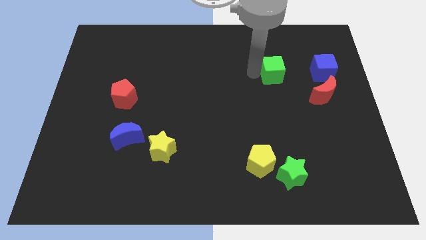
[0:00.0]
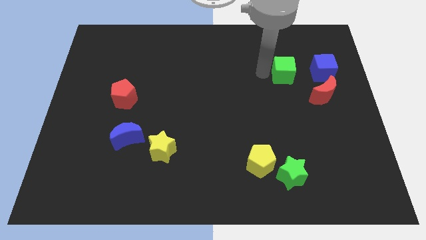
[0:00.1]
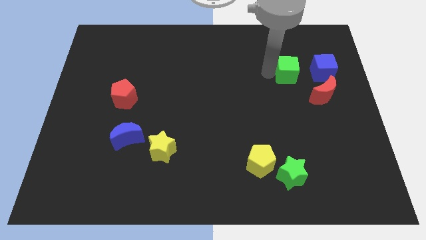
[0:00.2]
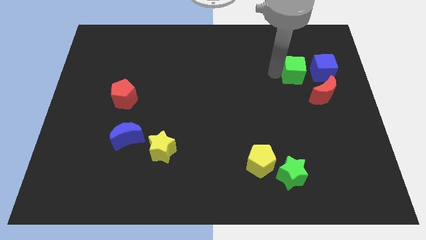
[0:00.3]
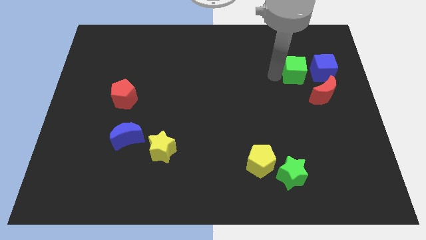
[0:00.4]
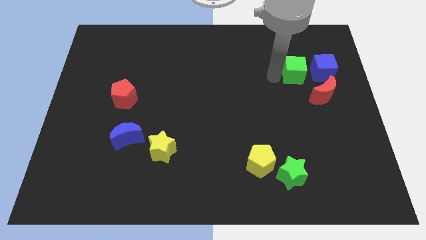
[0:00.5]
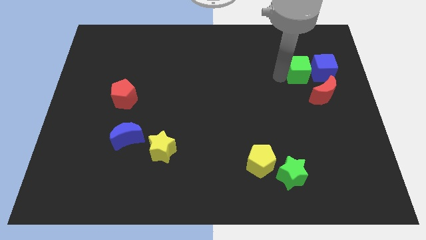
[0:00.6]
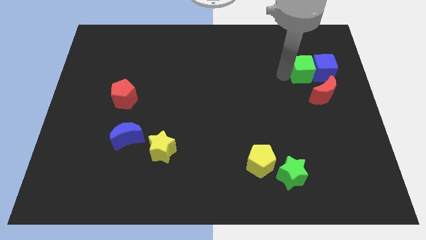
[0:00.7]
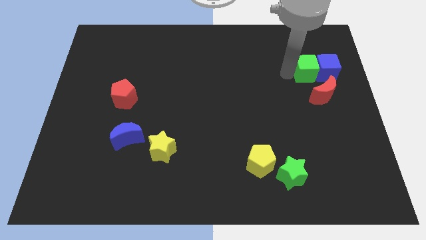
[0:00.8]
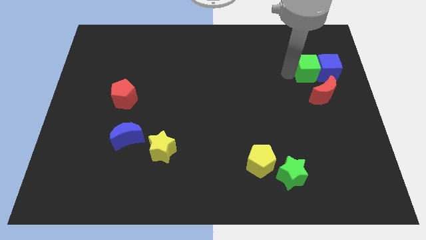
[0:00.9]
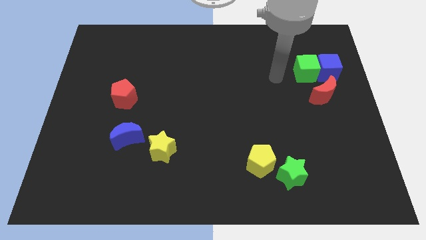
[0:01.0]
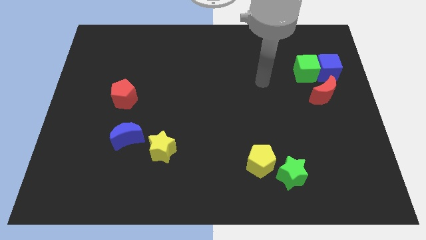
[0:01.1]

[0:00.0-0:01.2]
push the green cube into the blue cube

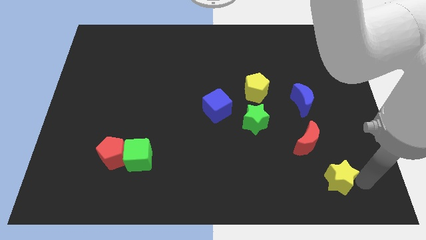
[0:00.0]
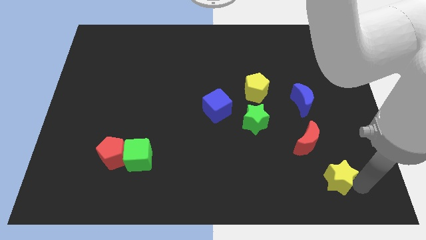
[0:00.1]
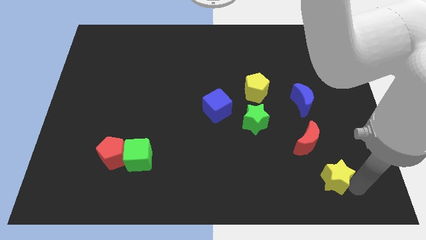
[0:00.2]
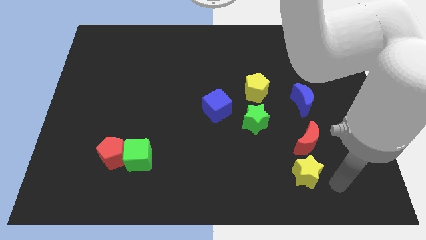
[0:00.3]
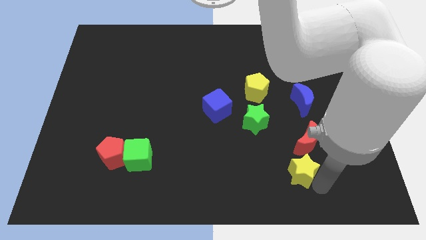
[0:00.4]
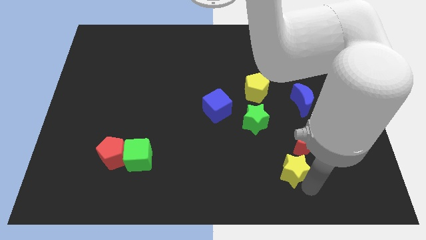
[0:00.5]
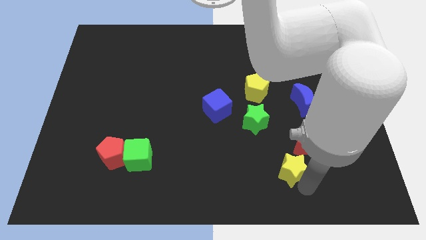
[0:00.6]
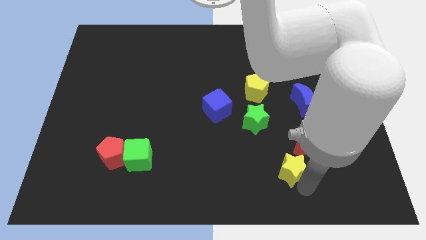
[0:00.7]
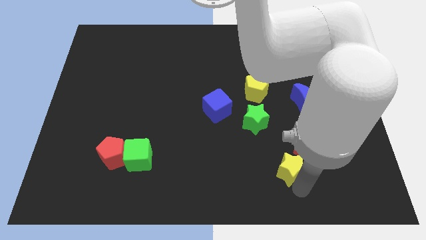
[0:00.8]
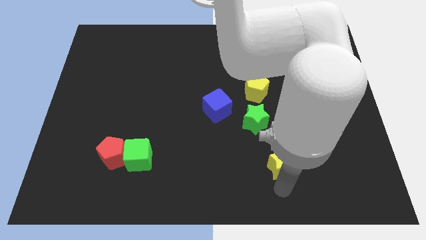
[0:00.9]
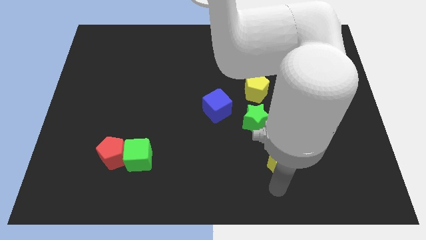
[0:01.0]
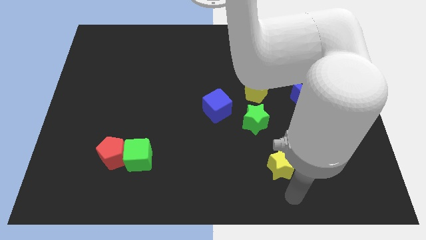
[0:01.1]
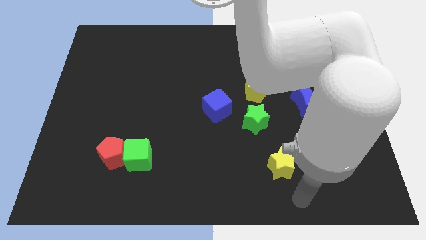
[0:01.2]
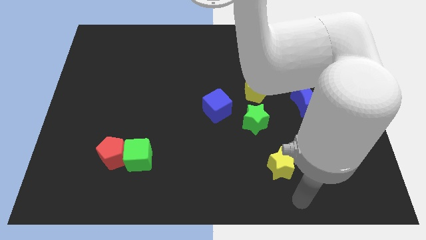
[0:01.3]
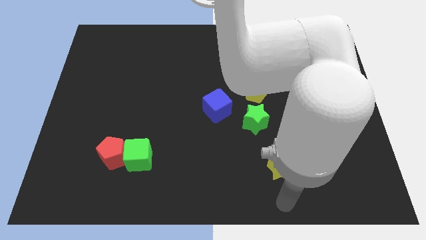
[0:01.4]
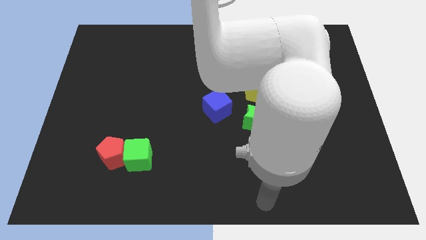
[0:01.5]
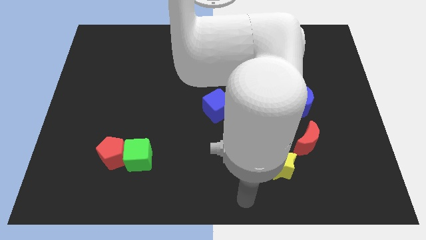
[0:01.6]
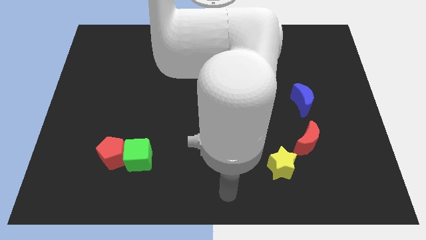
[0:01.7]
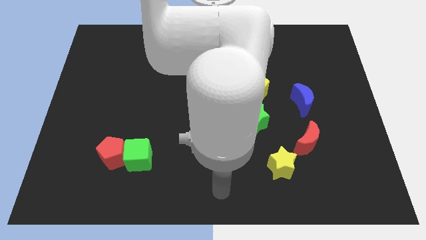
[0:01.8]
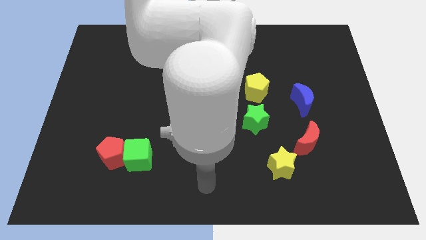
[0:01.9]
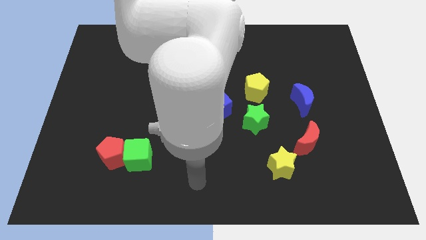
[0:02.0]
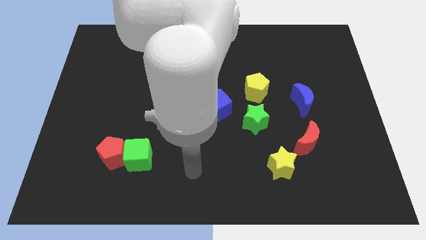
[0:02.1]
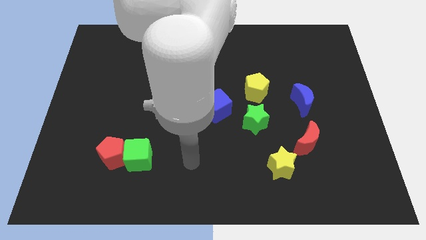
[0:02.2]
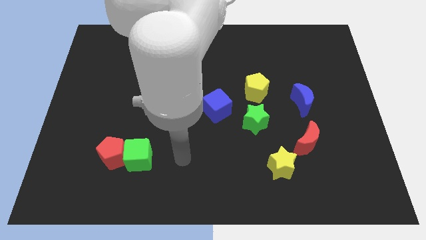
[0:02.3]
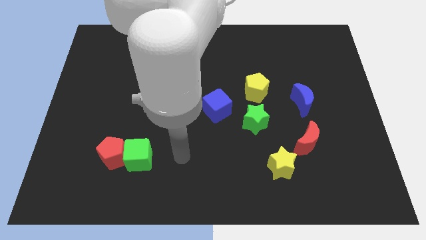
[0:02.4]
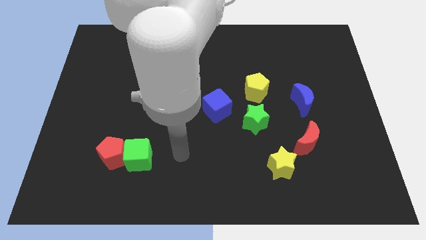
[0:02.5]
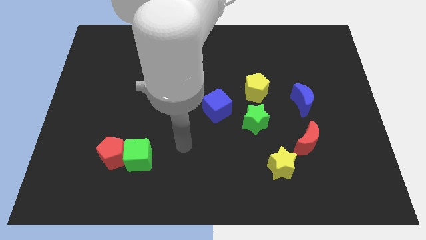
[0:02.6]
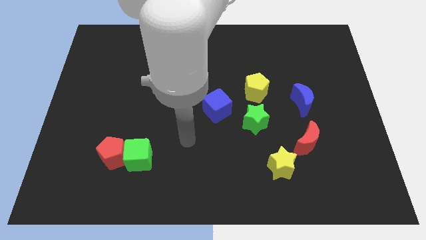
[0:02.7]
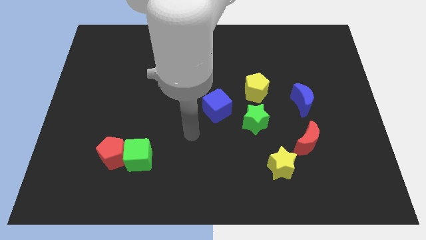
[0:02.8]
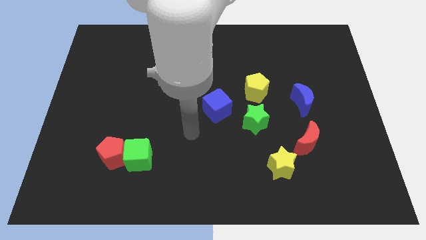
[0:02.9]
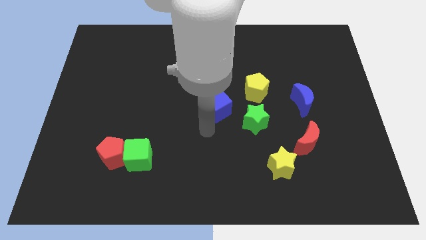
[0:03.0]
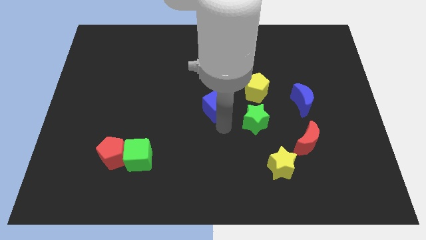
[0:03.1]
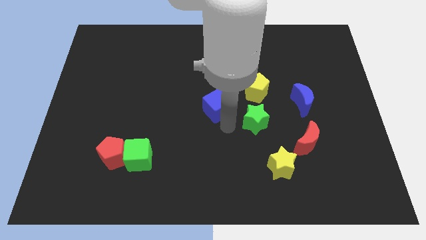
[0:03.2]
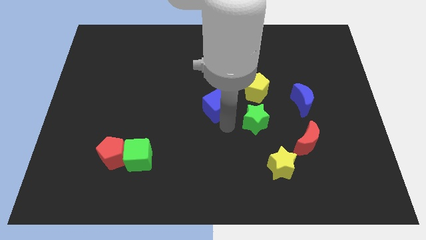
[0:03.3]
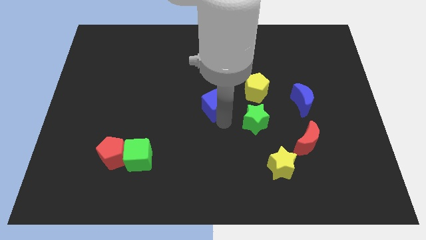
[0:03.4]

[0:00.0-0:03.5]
touch the bottom of yellow star and blue cube

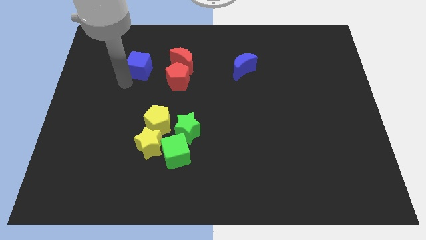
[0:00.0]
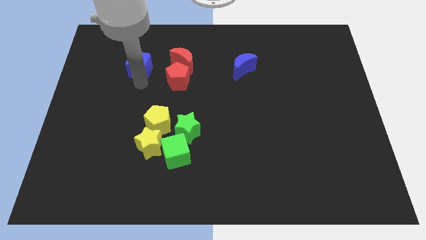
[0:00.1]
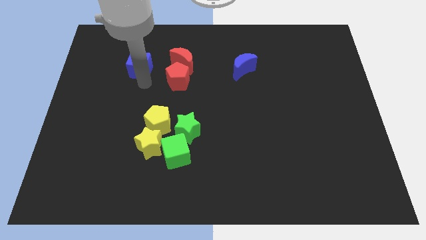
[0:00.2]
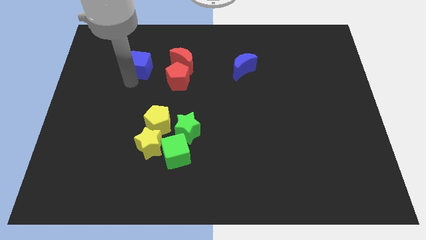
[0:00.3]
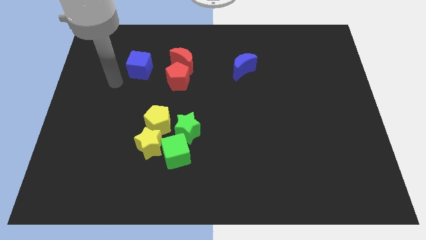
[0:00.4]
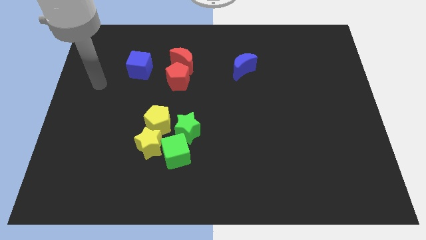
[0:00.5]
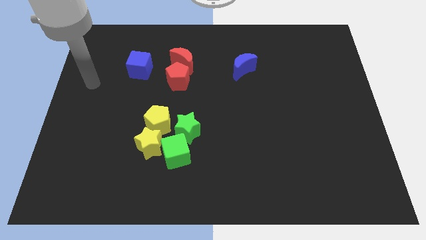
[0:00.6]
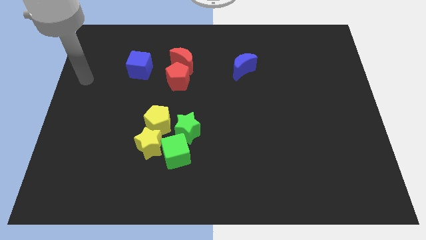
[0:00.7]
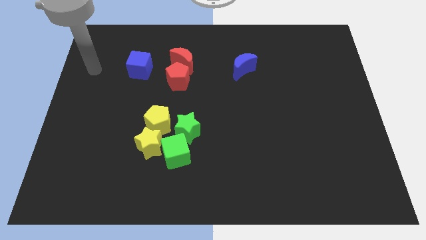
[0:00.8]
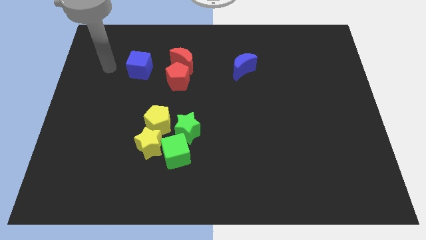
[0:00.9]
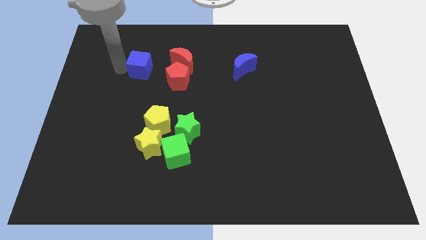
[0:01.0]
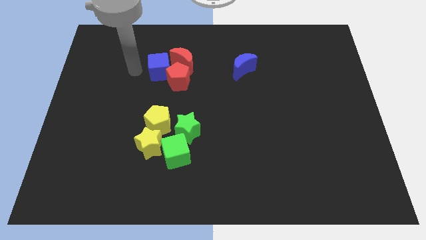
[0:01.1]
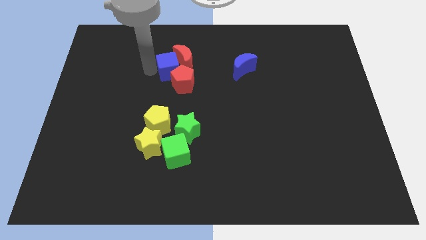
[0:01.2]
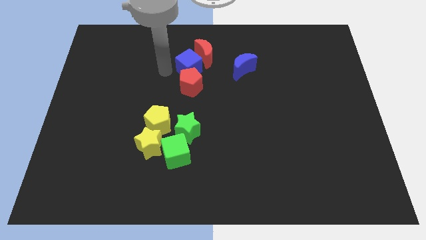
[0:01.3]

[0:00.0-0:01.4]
push the blue cube into the group of red blocks

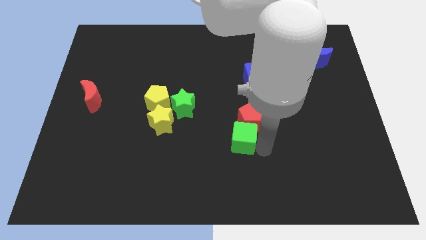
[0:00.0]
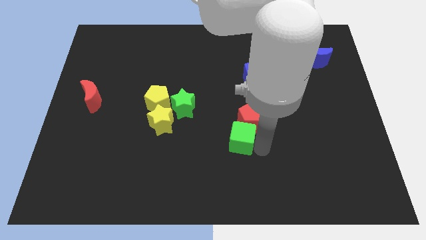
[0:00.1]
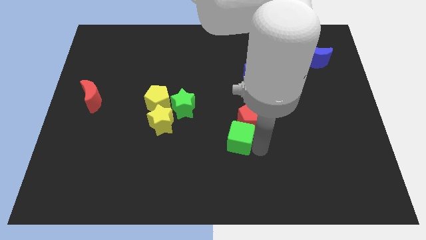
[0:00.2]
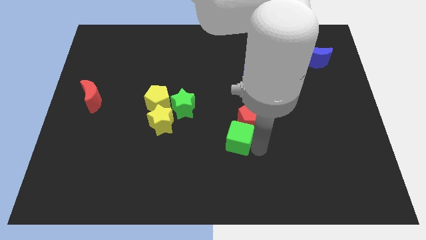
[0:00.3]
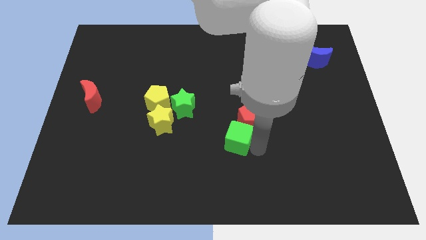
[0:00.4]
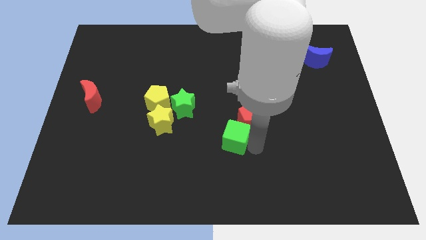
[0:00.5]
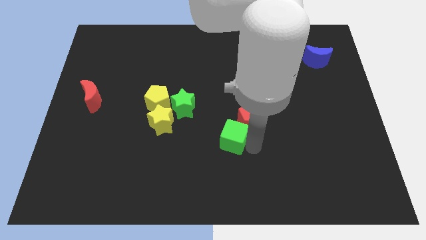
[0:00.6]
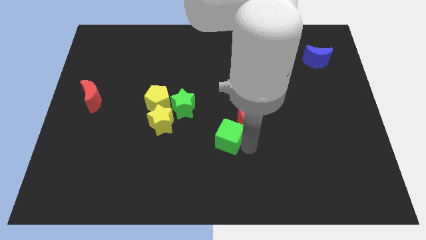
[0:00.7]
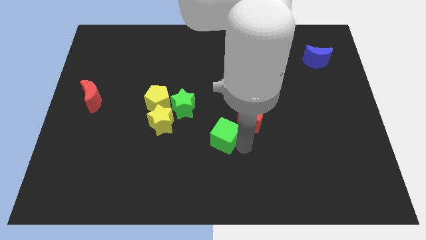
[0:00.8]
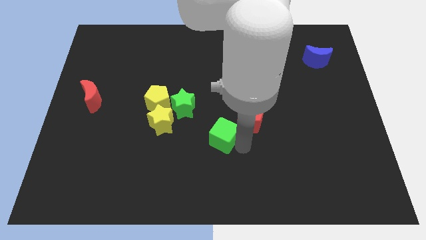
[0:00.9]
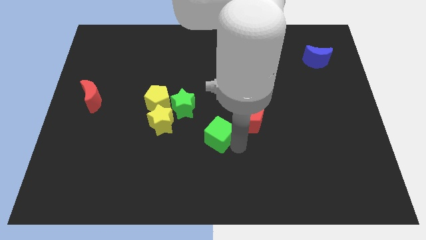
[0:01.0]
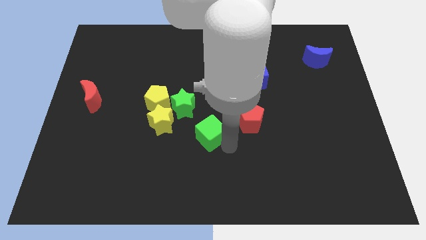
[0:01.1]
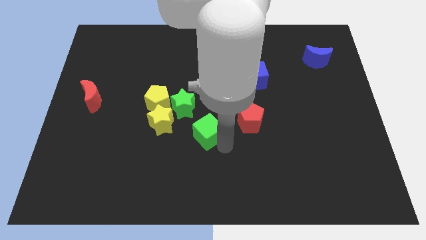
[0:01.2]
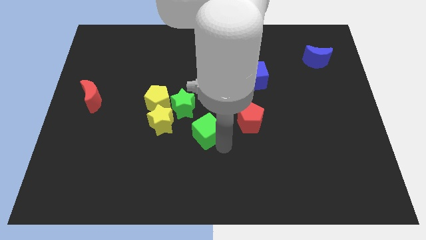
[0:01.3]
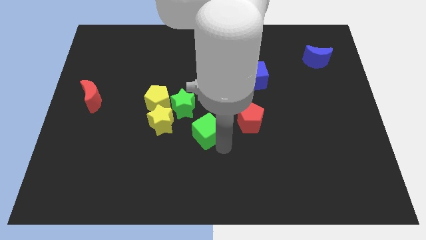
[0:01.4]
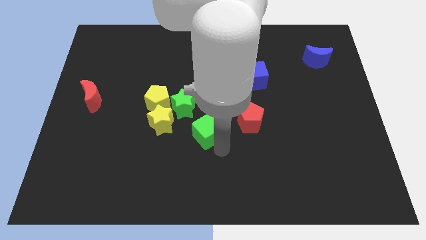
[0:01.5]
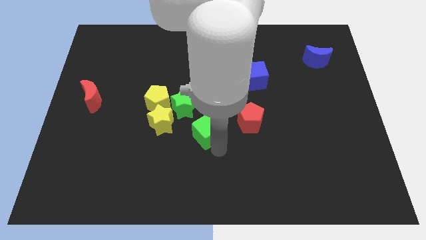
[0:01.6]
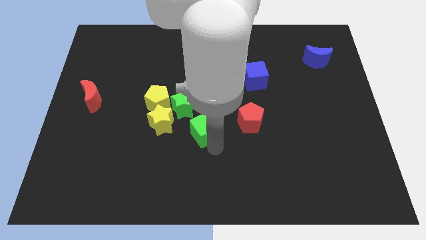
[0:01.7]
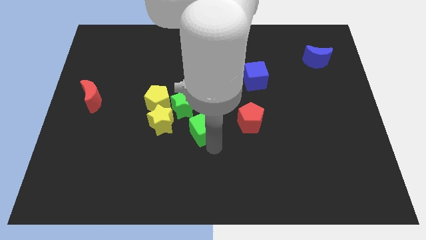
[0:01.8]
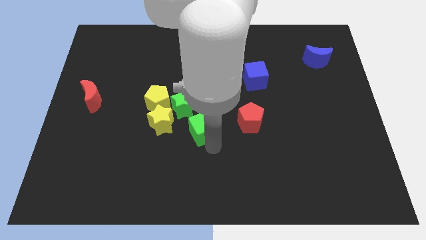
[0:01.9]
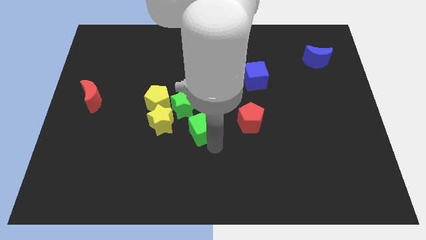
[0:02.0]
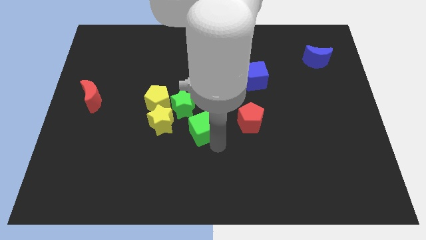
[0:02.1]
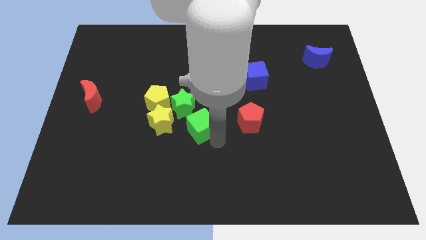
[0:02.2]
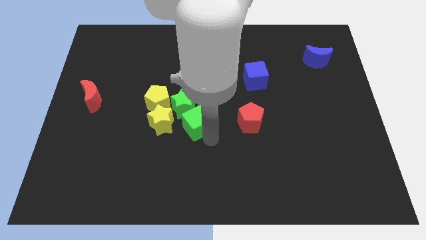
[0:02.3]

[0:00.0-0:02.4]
place the green cube diagonally bottom right to the green star

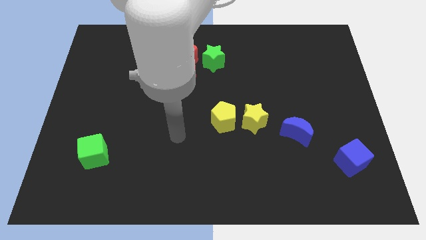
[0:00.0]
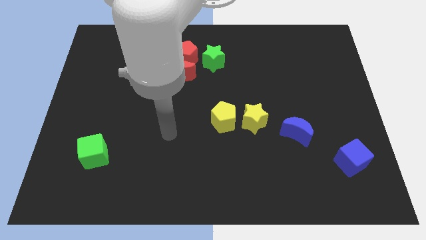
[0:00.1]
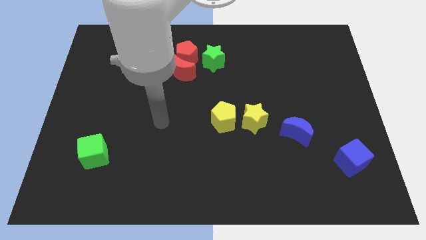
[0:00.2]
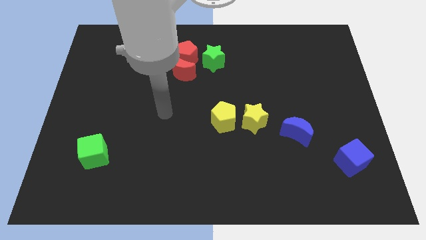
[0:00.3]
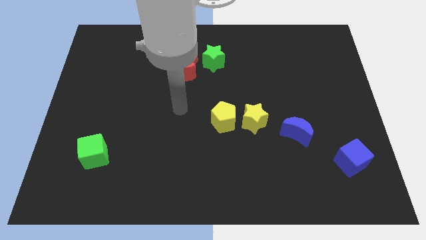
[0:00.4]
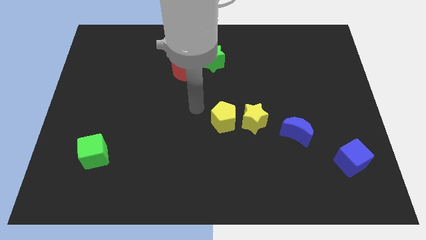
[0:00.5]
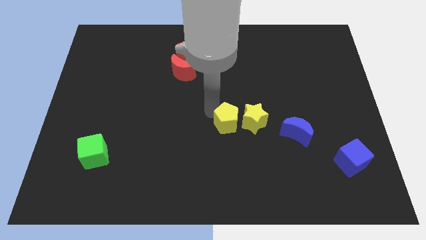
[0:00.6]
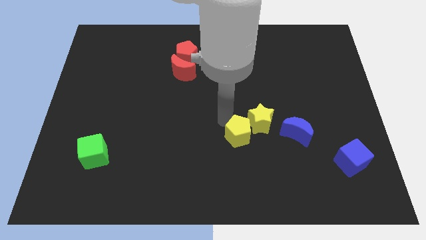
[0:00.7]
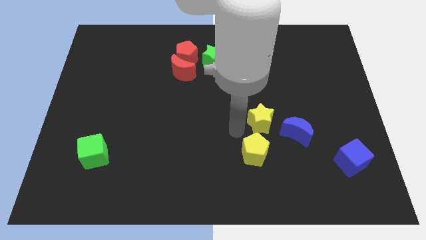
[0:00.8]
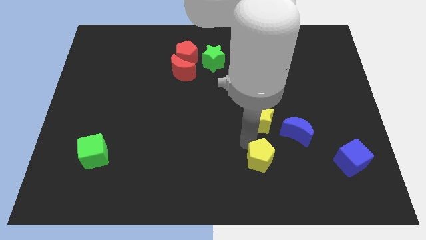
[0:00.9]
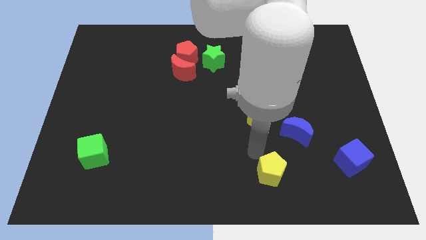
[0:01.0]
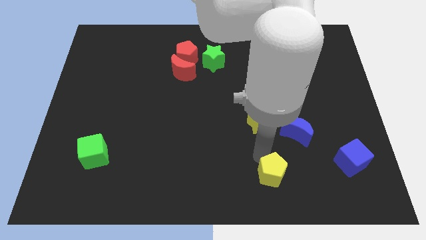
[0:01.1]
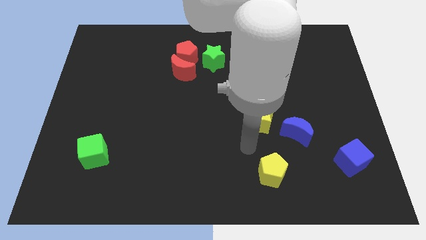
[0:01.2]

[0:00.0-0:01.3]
put the yellow pentagon vertically below the yellow star
